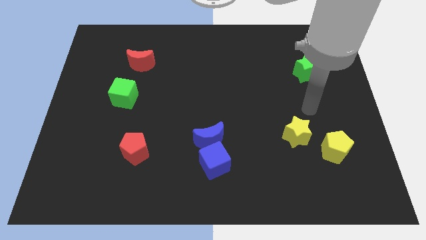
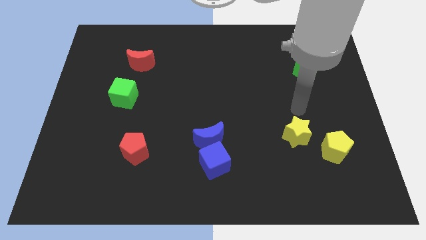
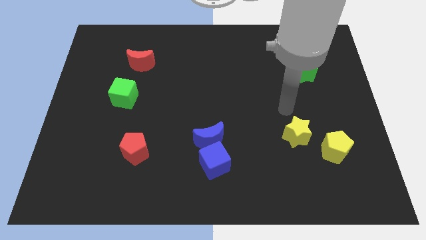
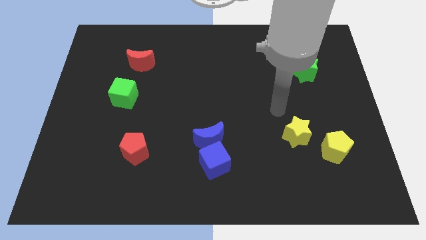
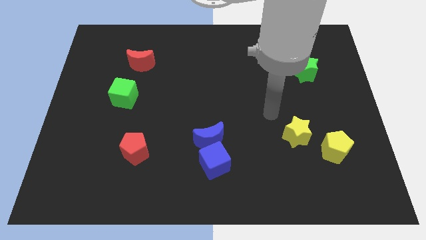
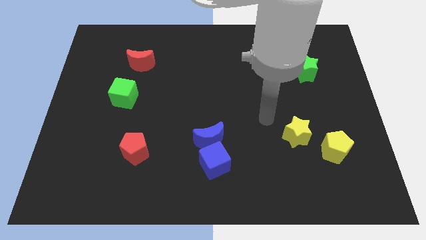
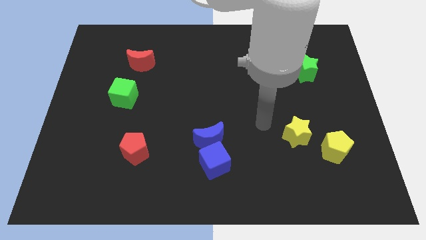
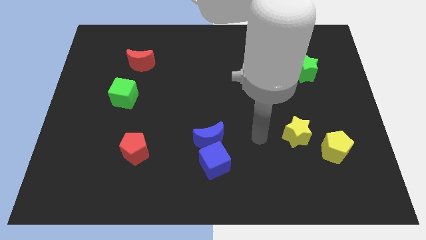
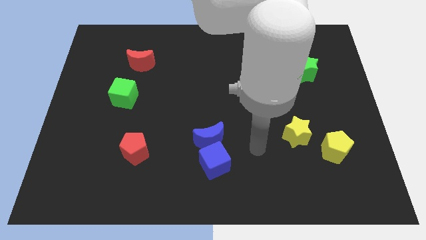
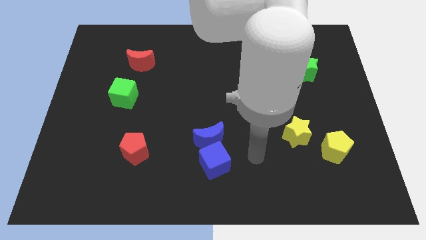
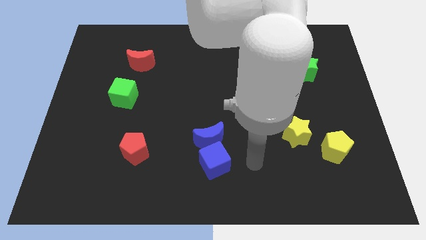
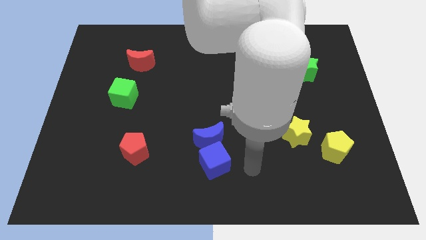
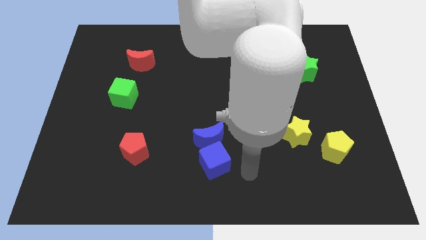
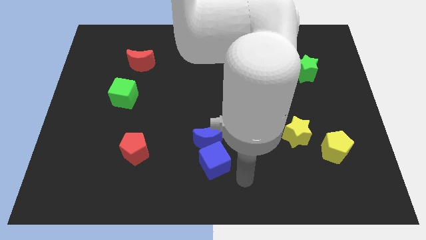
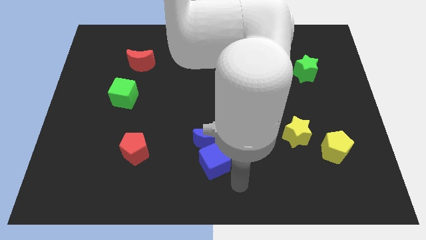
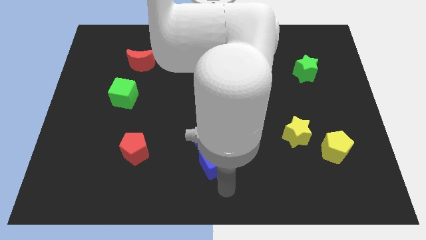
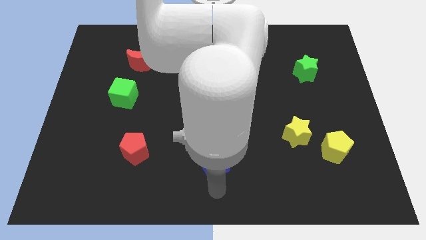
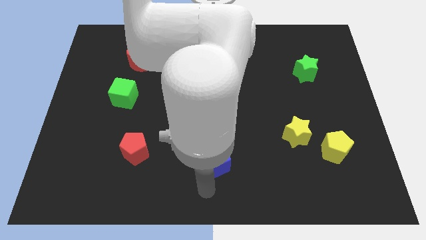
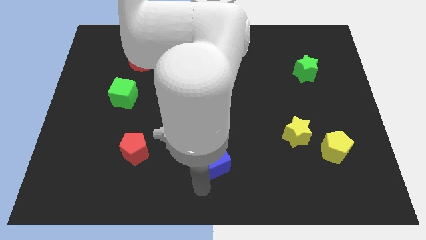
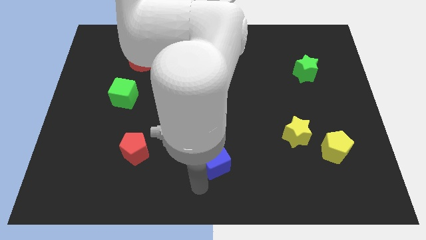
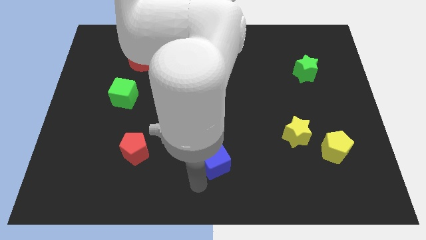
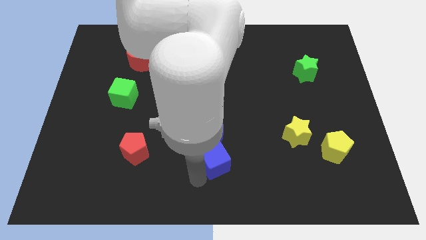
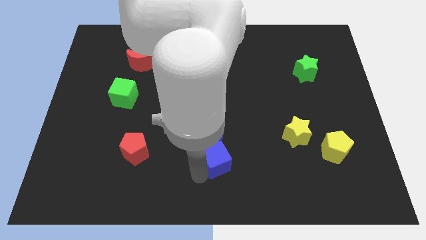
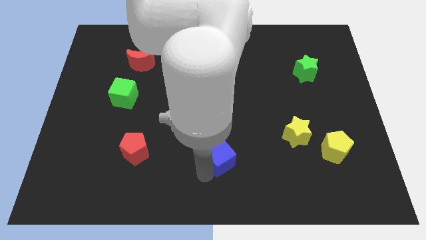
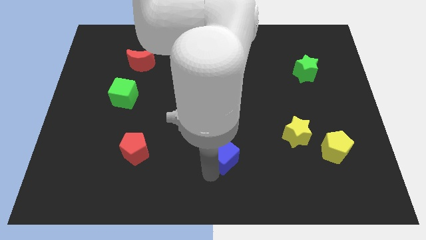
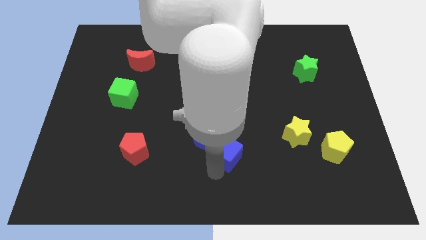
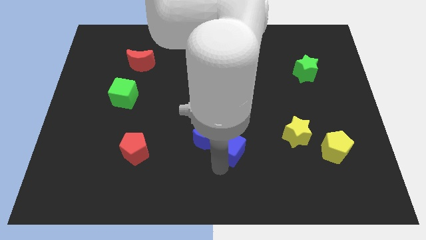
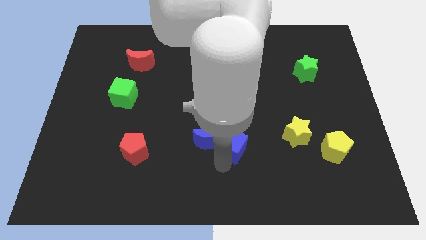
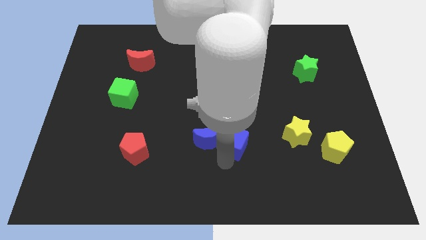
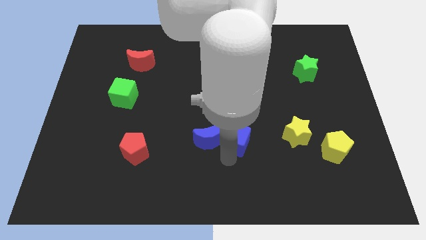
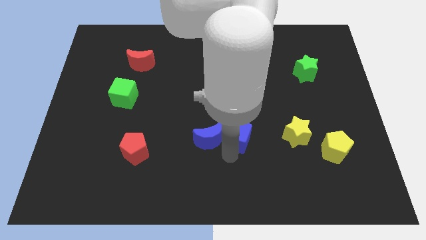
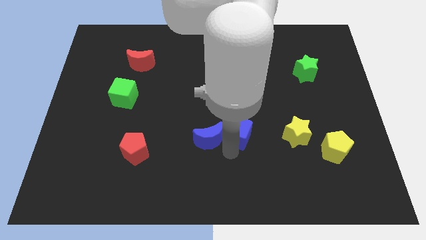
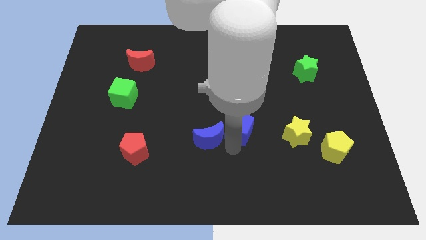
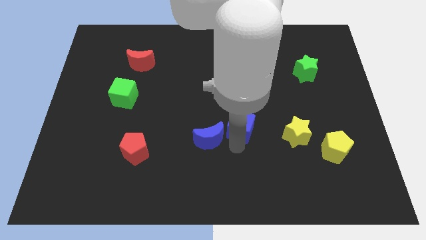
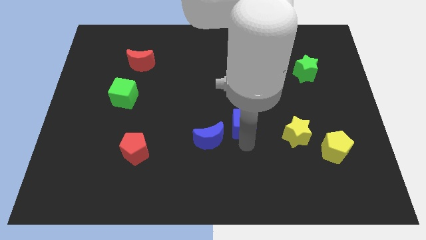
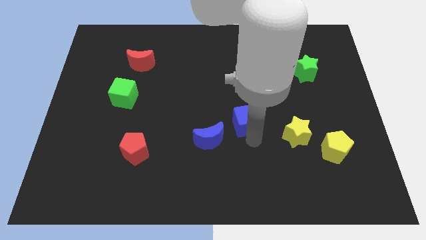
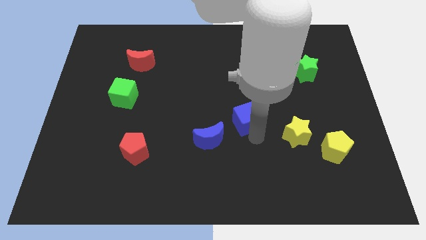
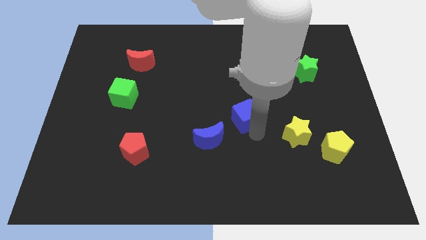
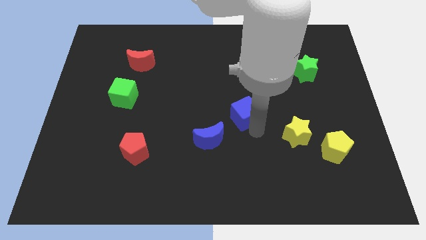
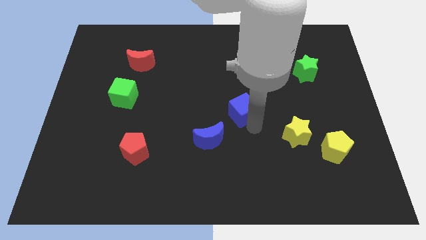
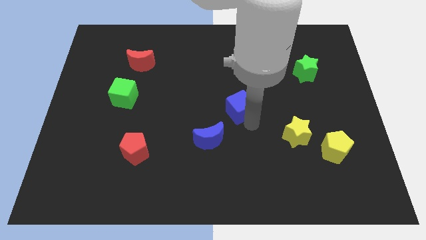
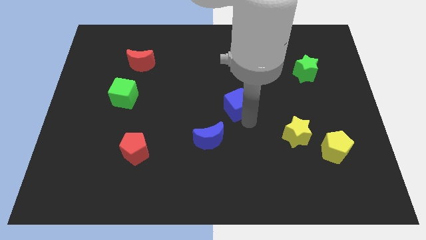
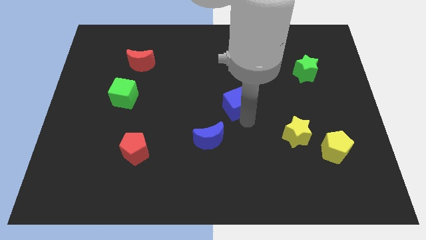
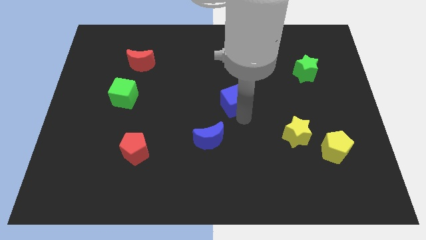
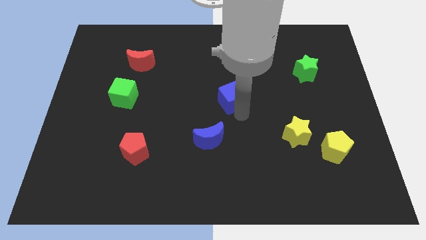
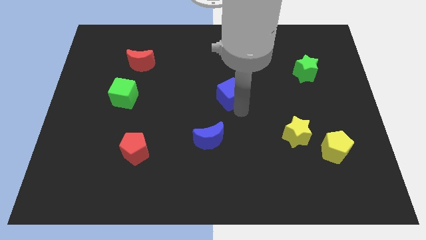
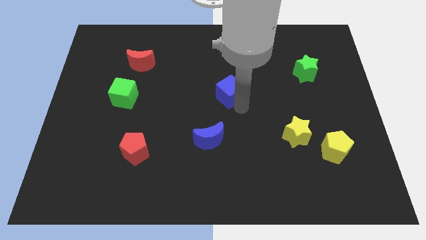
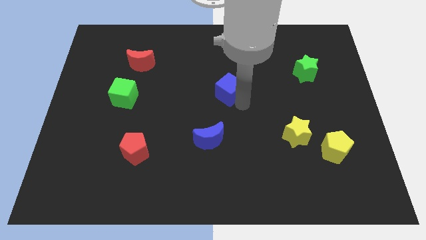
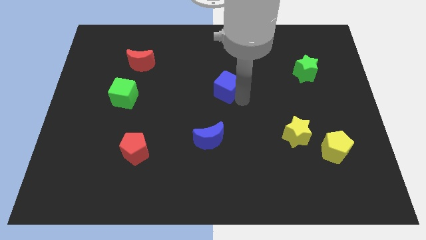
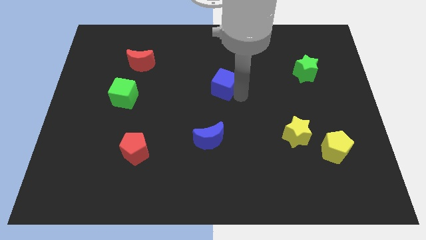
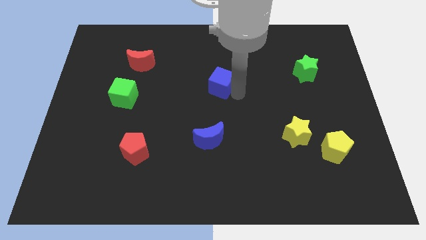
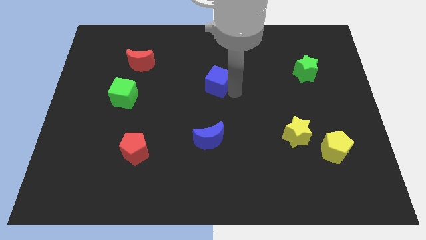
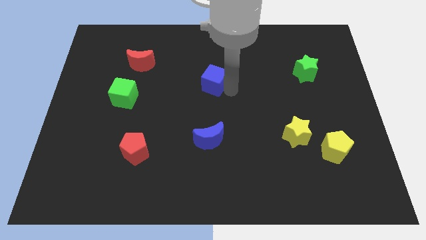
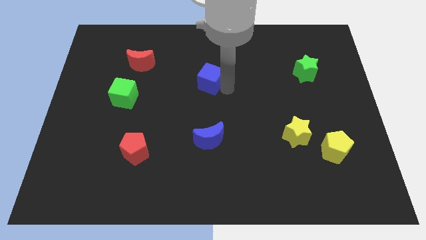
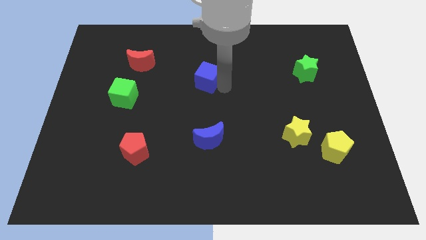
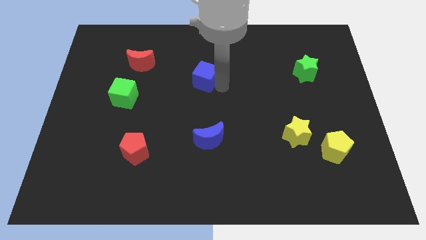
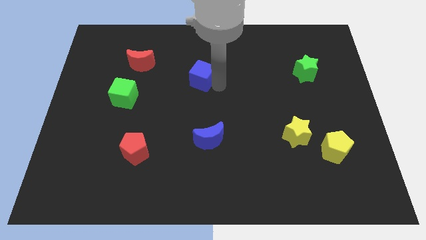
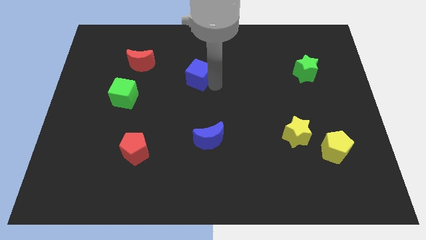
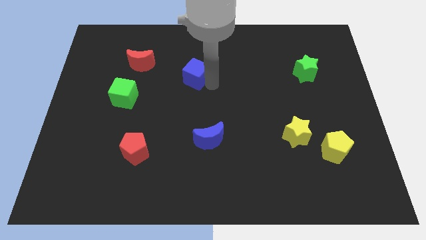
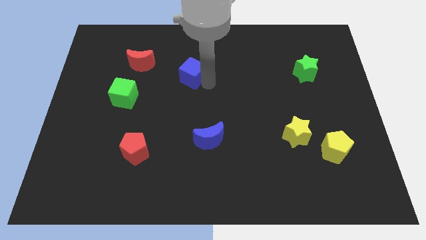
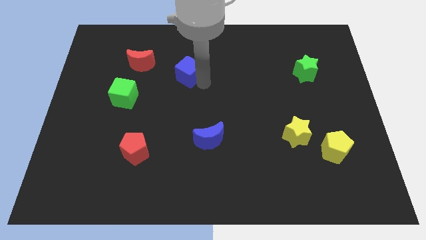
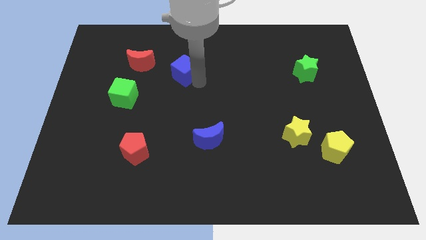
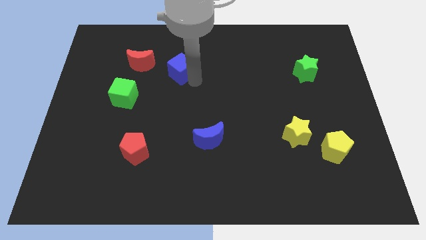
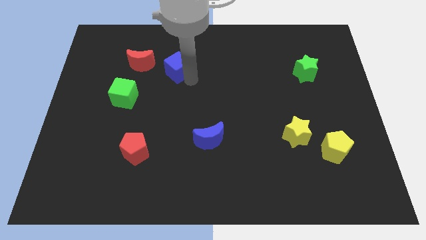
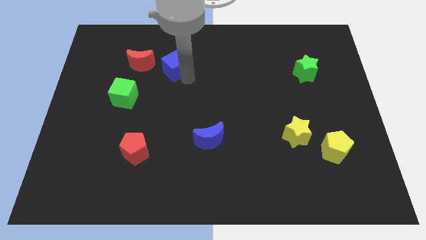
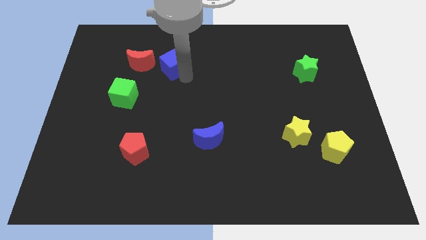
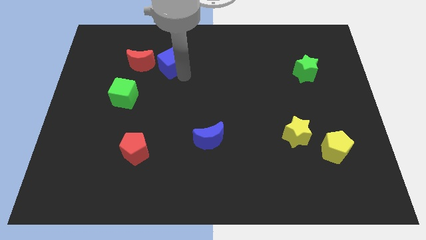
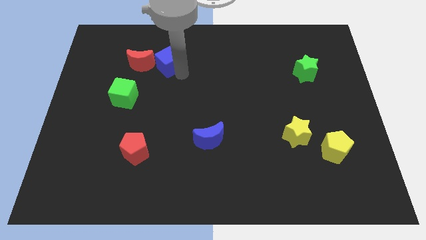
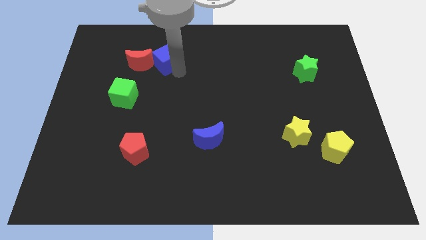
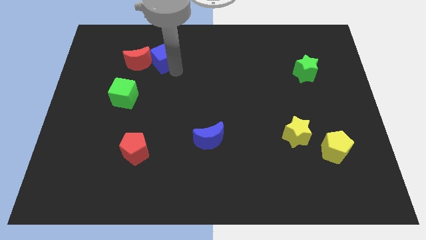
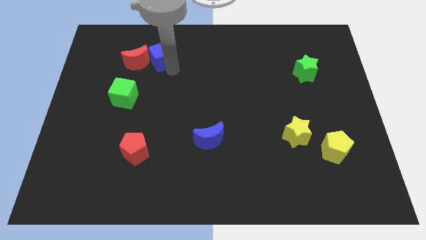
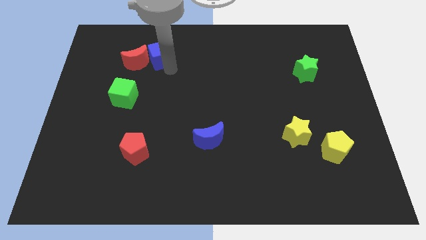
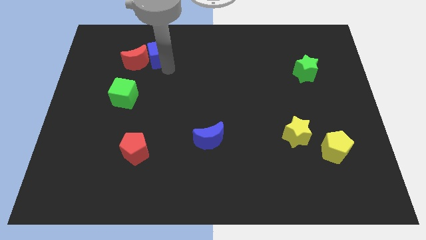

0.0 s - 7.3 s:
put the blue cube to the red moon

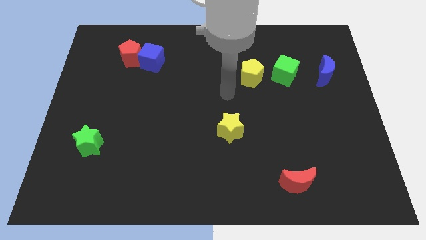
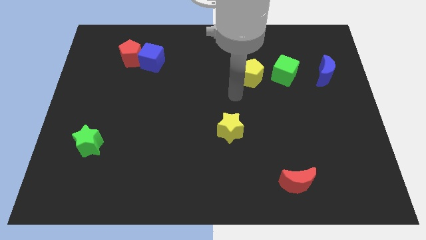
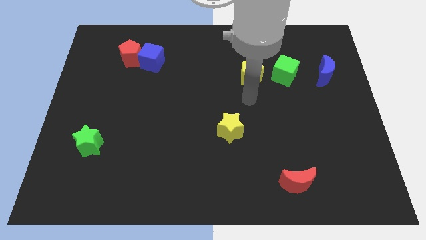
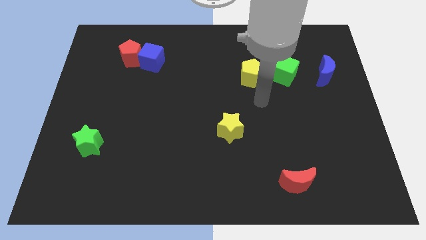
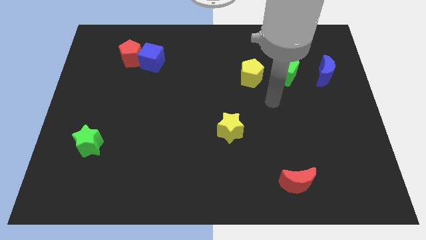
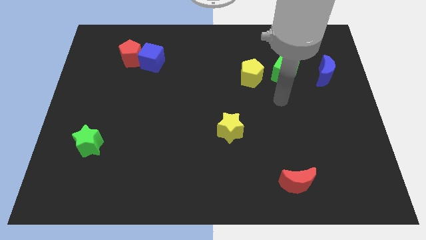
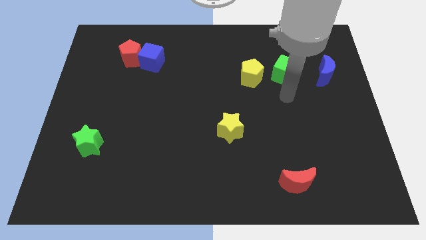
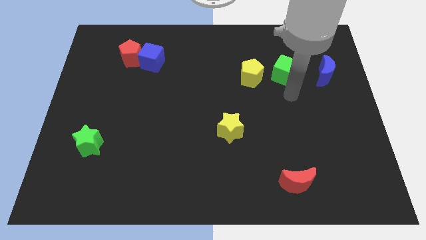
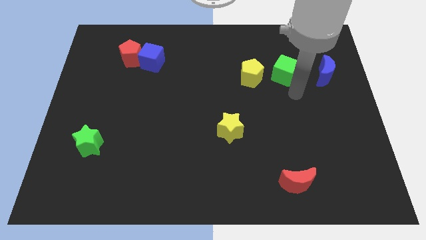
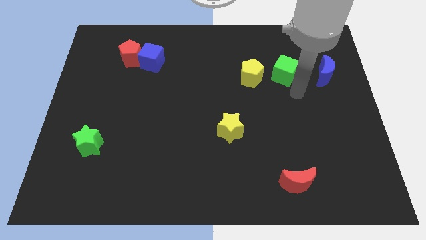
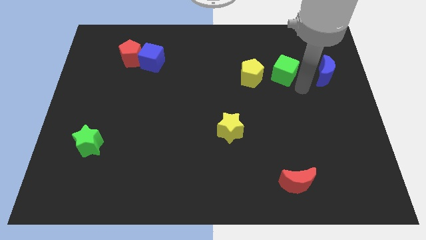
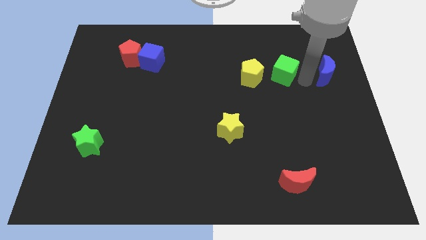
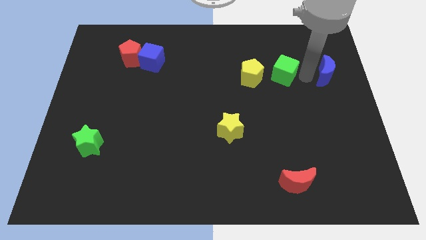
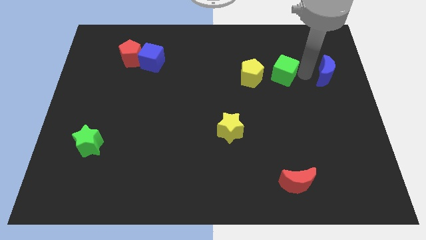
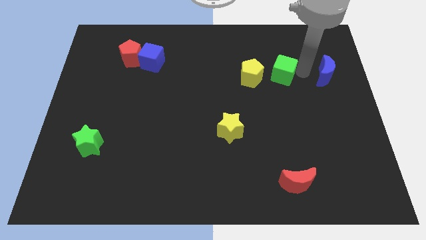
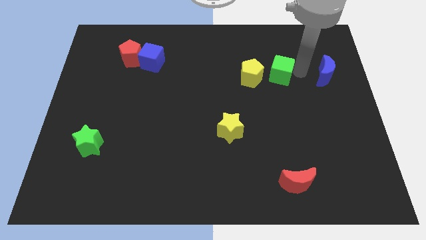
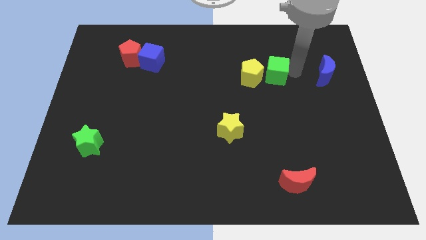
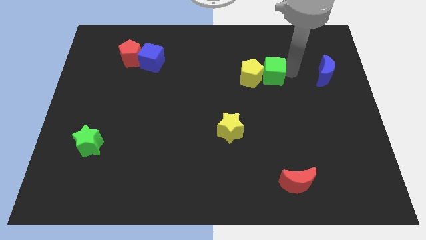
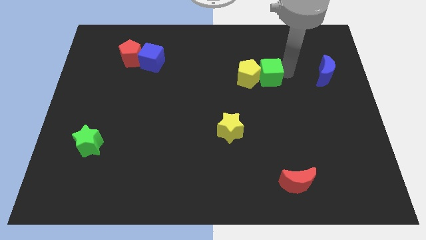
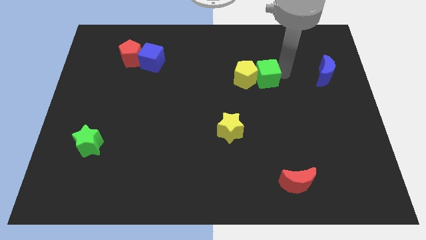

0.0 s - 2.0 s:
put the green cube next to the yellow pentagon
